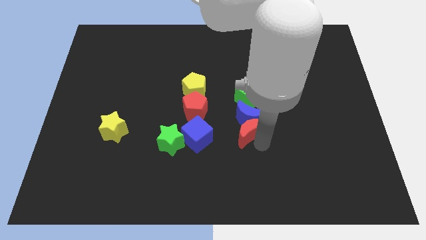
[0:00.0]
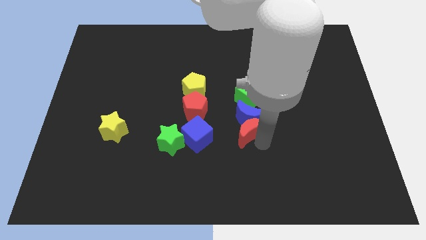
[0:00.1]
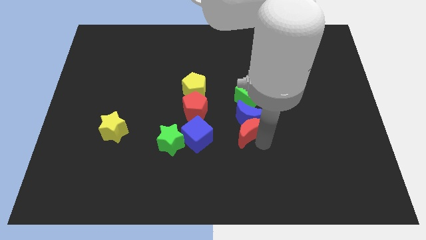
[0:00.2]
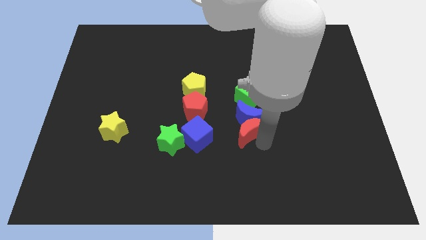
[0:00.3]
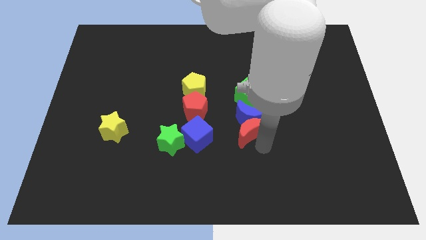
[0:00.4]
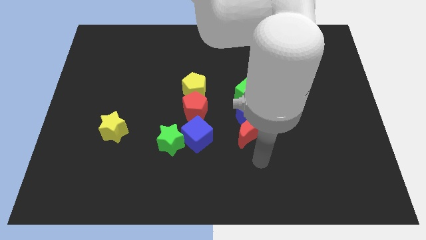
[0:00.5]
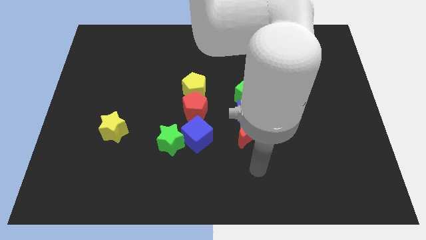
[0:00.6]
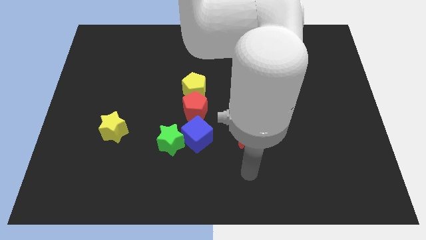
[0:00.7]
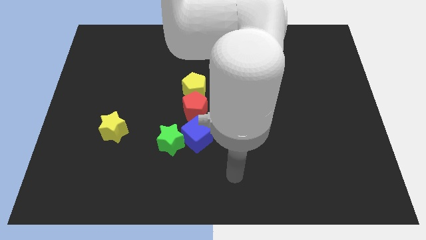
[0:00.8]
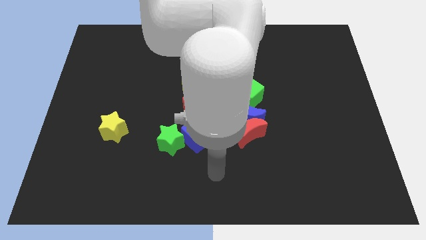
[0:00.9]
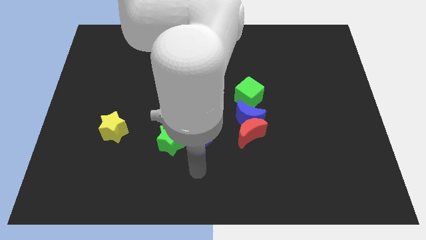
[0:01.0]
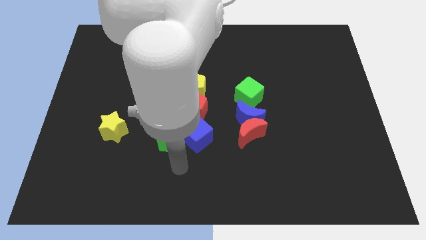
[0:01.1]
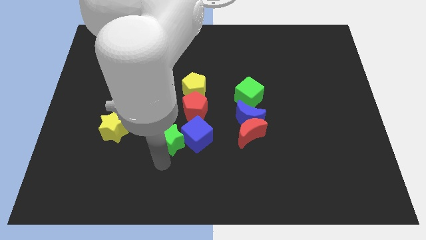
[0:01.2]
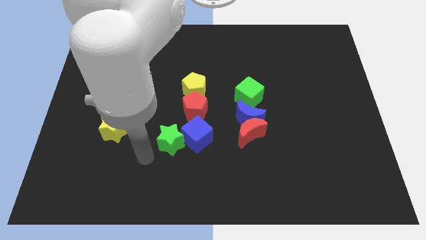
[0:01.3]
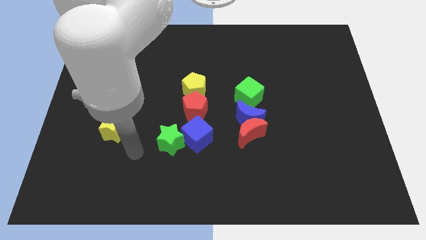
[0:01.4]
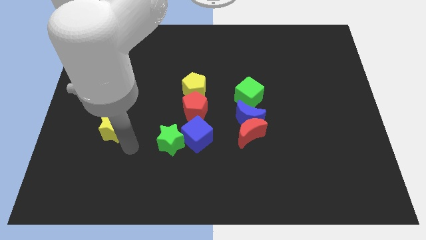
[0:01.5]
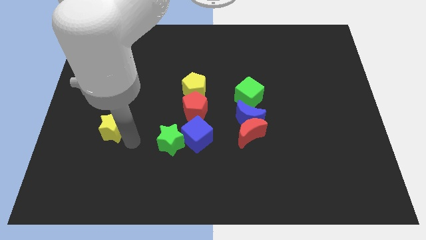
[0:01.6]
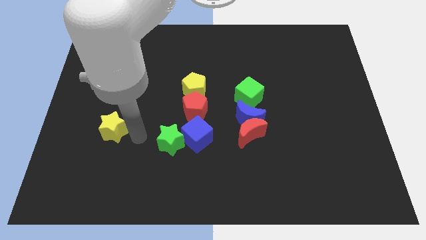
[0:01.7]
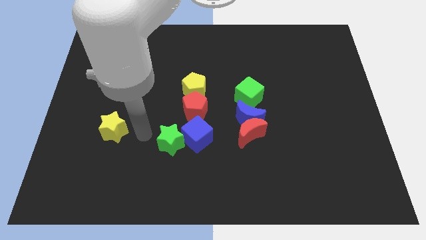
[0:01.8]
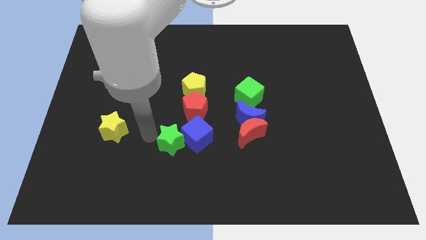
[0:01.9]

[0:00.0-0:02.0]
move your arm to the left of the green star

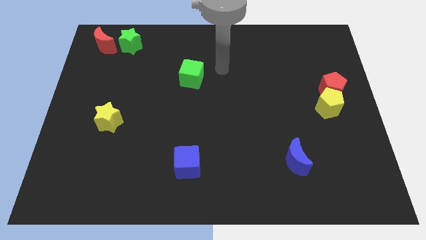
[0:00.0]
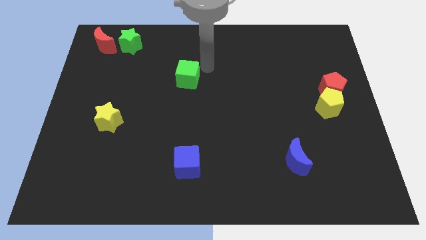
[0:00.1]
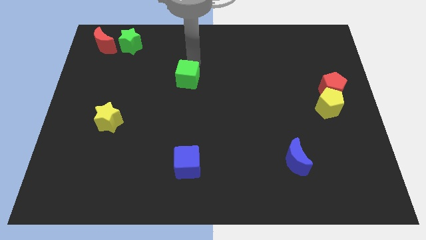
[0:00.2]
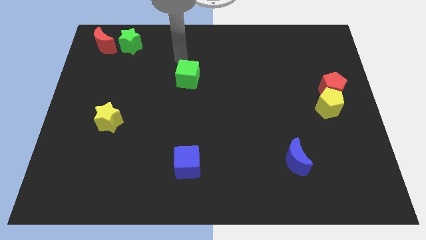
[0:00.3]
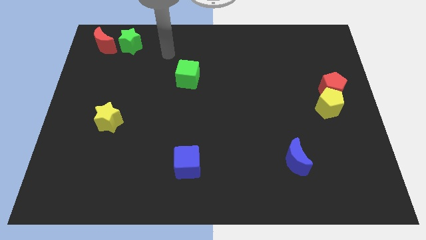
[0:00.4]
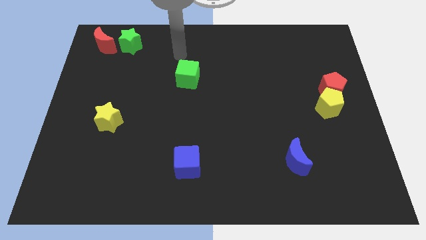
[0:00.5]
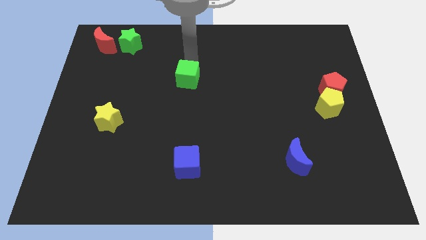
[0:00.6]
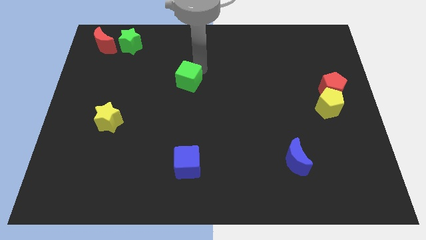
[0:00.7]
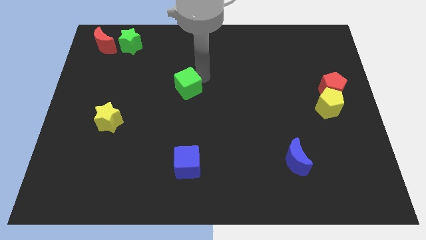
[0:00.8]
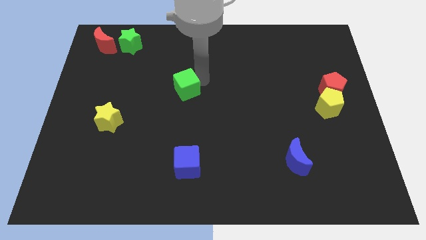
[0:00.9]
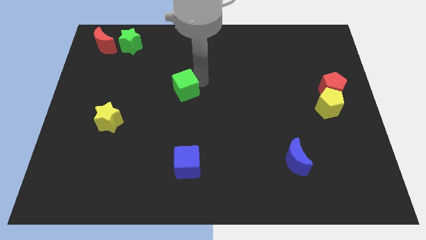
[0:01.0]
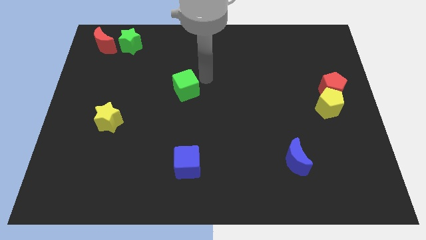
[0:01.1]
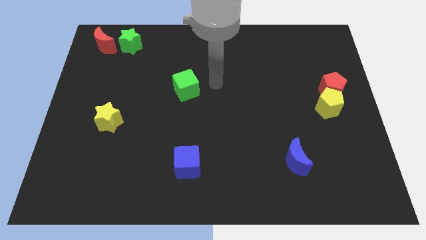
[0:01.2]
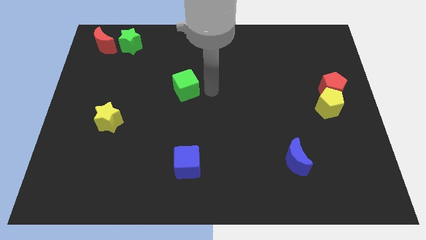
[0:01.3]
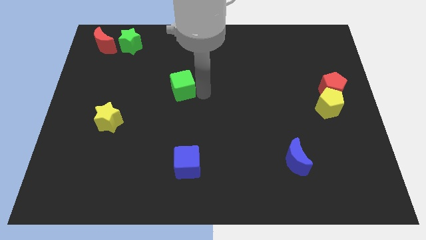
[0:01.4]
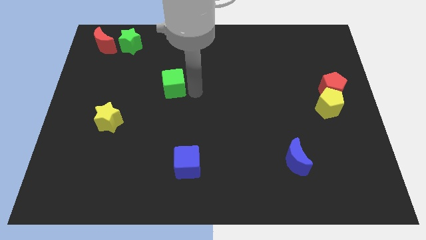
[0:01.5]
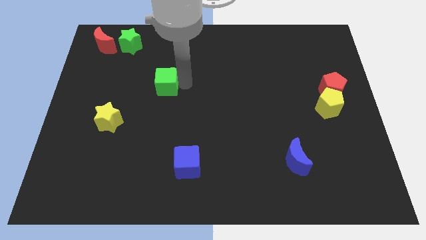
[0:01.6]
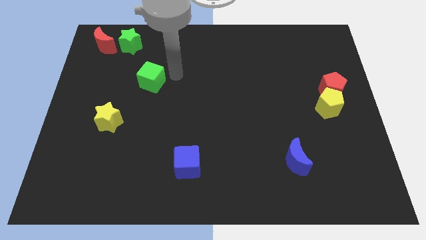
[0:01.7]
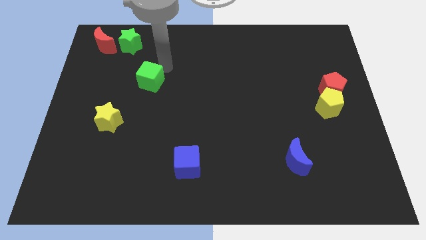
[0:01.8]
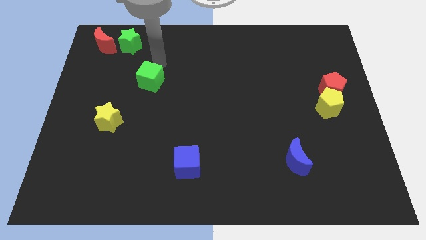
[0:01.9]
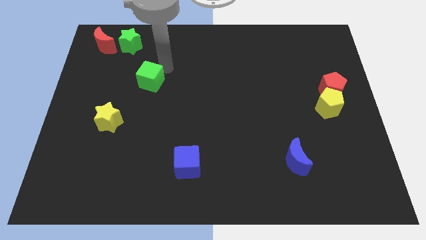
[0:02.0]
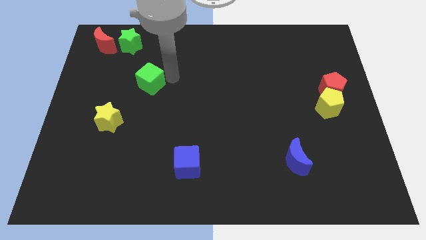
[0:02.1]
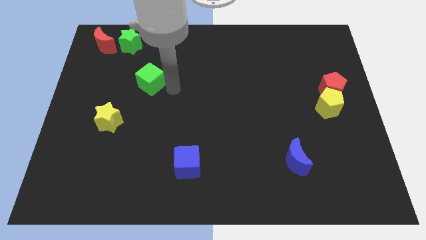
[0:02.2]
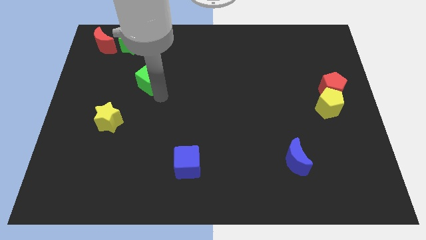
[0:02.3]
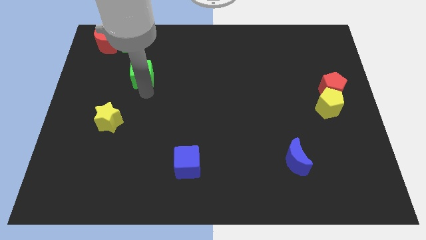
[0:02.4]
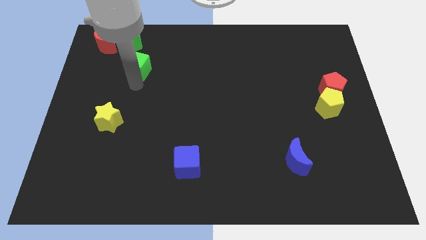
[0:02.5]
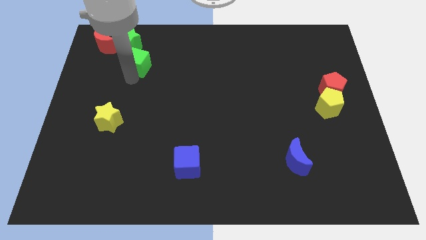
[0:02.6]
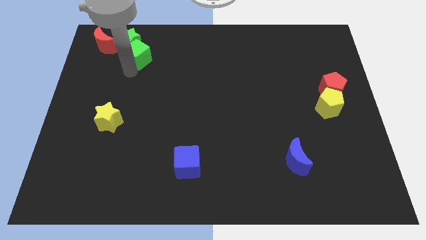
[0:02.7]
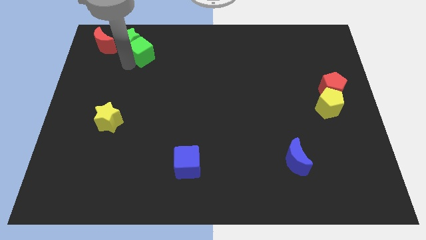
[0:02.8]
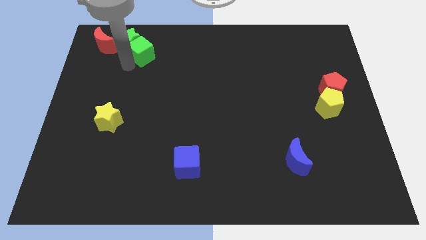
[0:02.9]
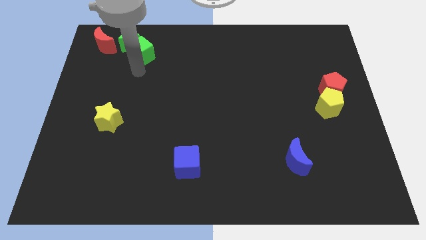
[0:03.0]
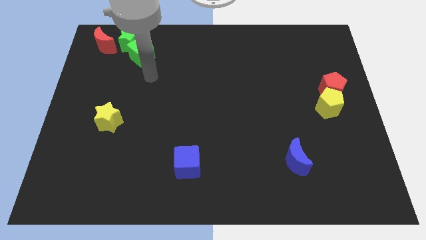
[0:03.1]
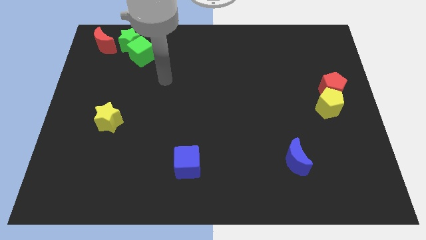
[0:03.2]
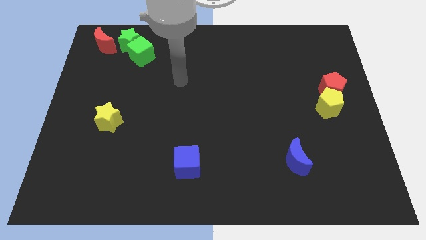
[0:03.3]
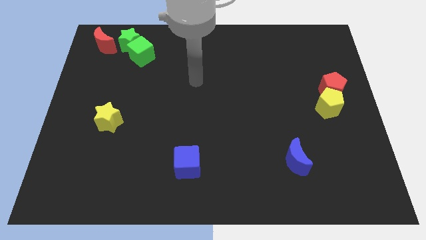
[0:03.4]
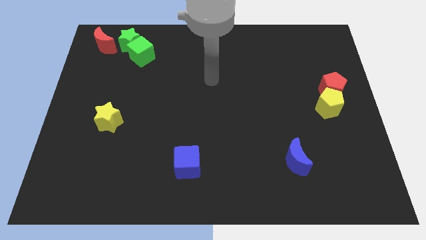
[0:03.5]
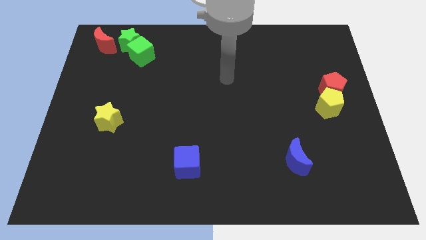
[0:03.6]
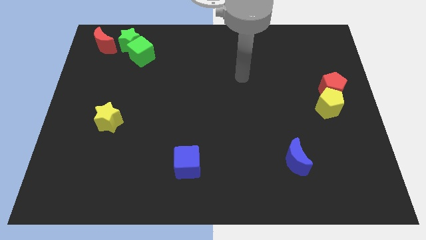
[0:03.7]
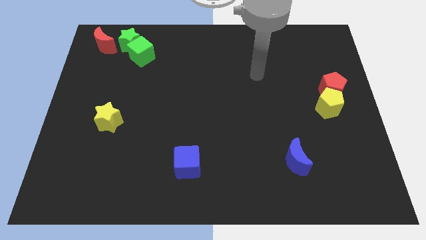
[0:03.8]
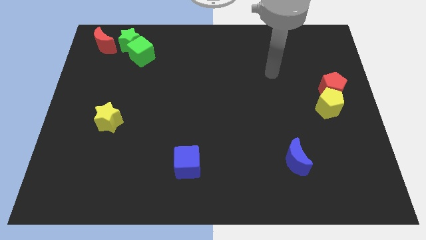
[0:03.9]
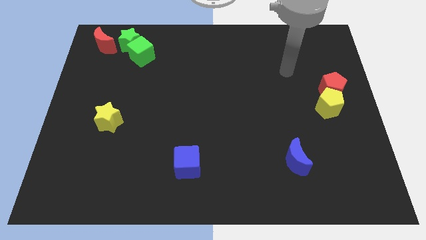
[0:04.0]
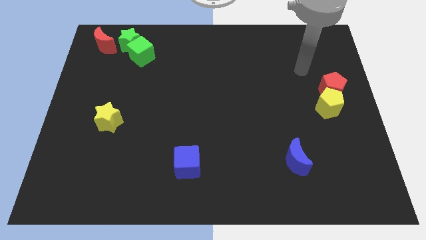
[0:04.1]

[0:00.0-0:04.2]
push the green cube close to the green star

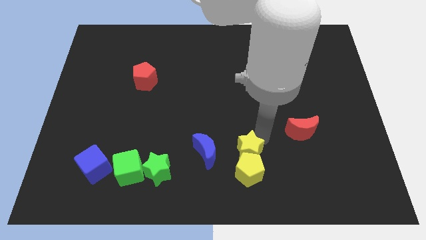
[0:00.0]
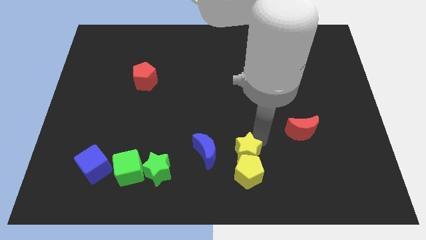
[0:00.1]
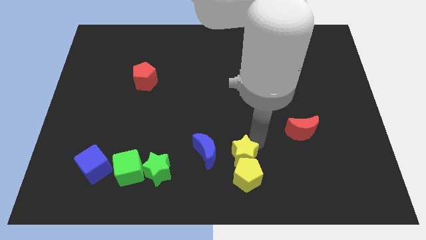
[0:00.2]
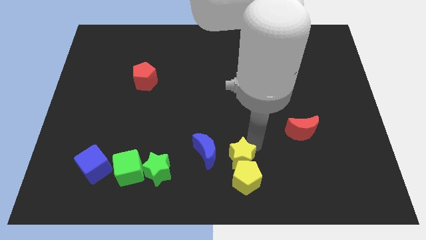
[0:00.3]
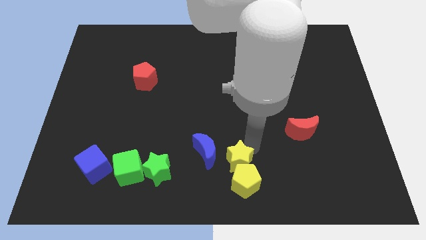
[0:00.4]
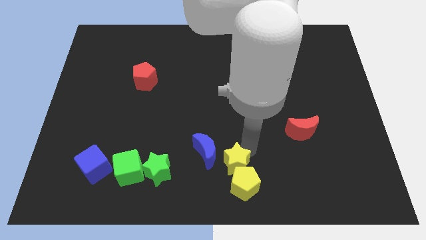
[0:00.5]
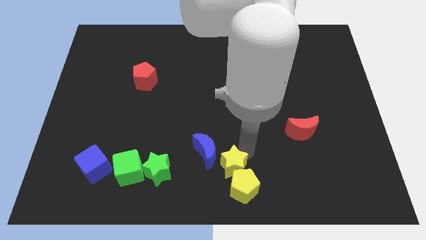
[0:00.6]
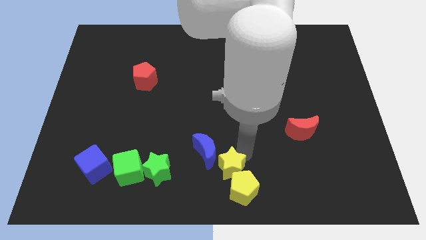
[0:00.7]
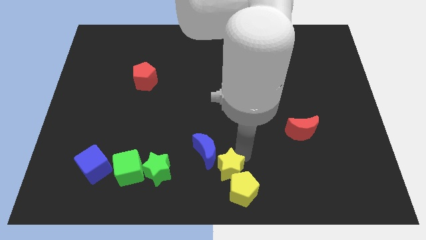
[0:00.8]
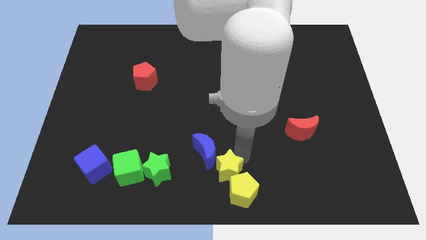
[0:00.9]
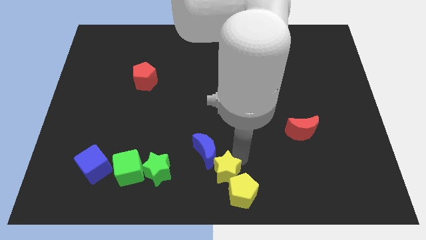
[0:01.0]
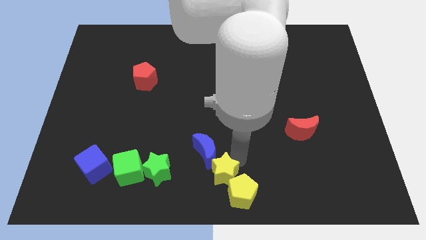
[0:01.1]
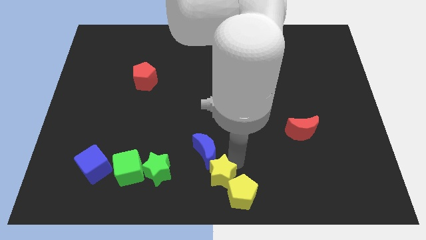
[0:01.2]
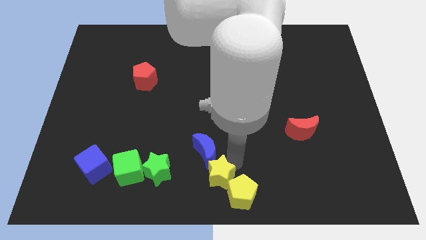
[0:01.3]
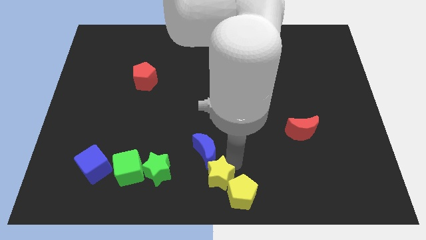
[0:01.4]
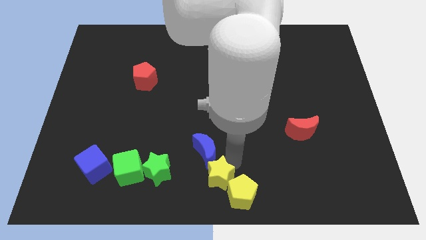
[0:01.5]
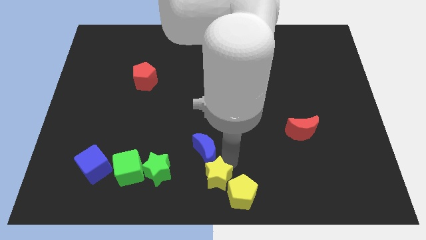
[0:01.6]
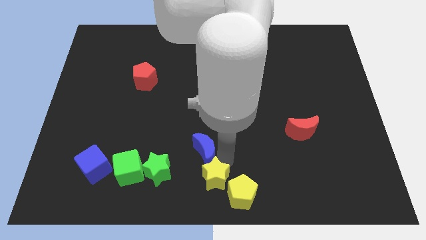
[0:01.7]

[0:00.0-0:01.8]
push the yellow star to the bottom of the blue moon

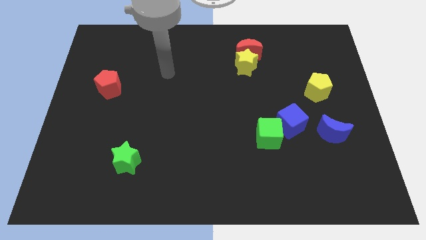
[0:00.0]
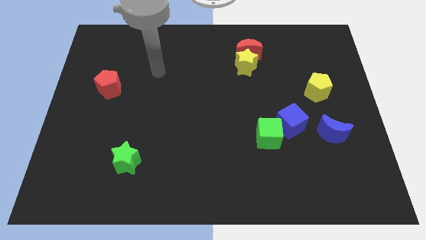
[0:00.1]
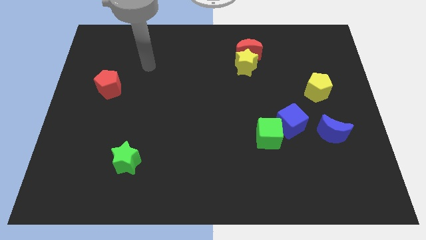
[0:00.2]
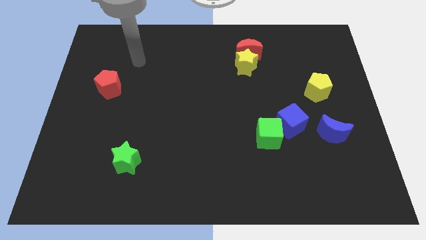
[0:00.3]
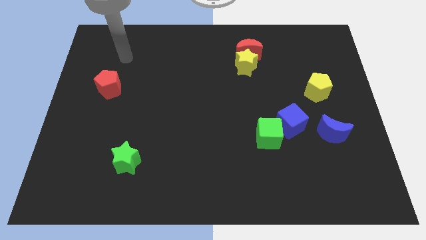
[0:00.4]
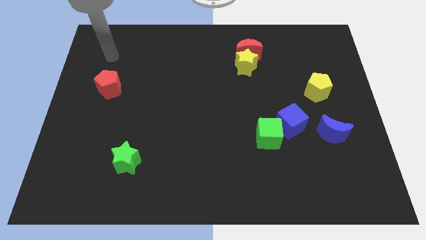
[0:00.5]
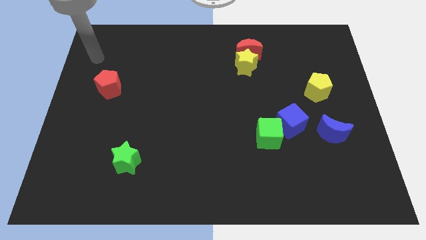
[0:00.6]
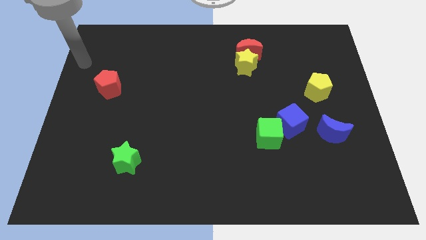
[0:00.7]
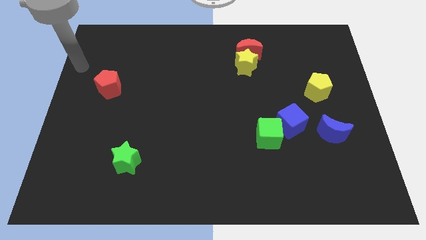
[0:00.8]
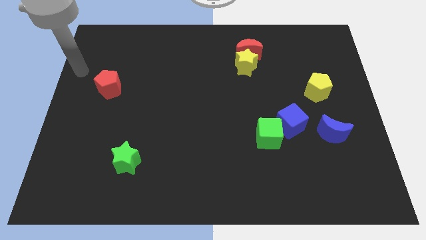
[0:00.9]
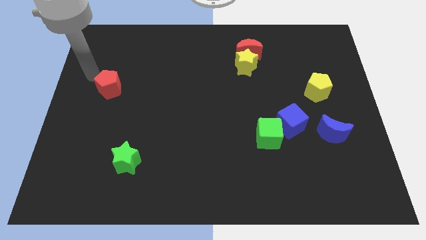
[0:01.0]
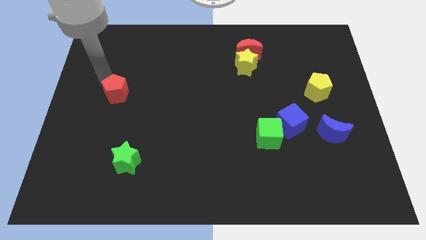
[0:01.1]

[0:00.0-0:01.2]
place the arm diagonal to the red pentagon
